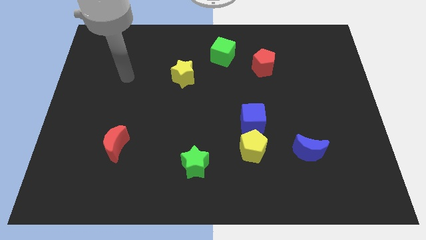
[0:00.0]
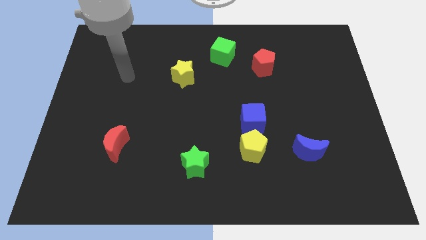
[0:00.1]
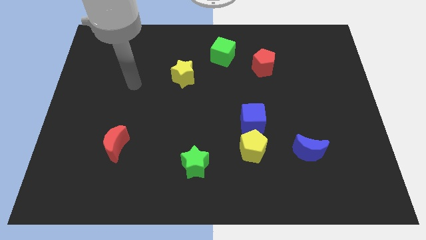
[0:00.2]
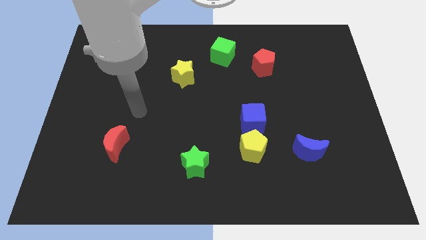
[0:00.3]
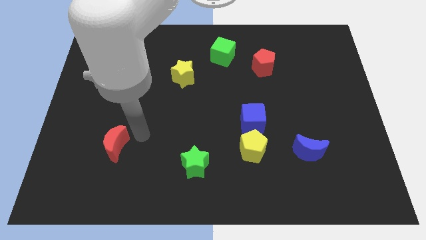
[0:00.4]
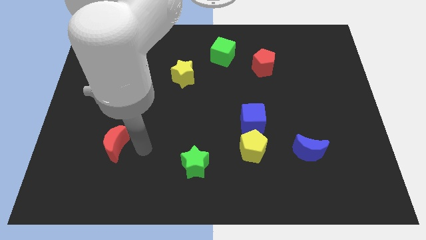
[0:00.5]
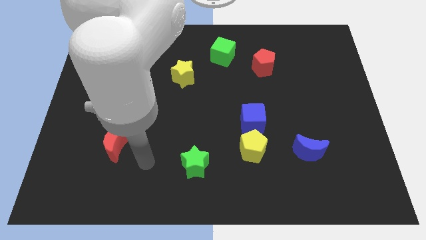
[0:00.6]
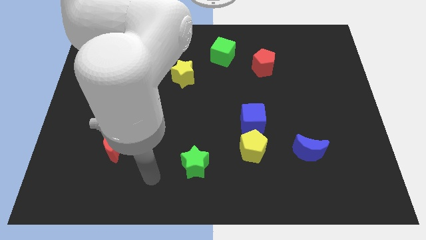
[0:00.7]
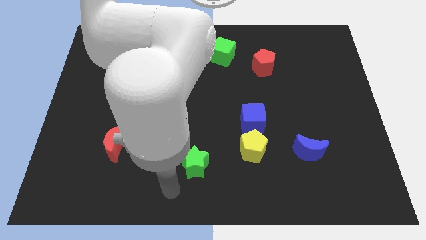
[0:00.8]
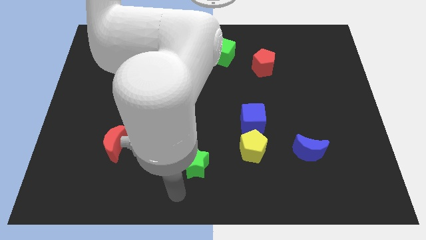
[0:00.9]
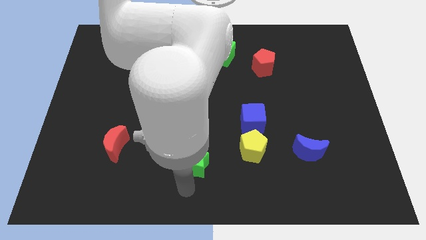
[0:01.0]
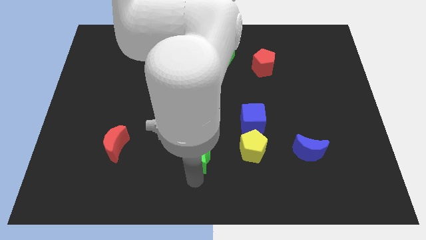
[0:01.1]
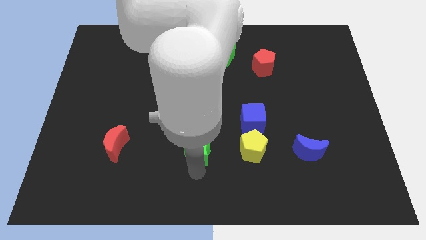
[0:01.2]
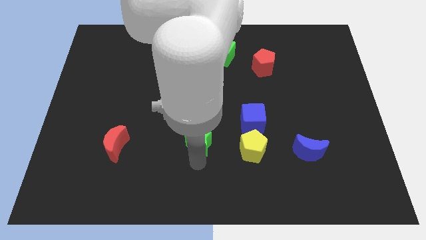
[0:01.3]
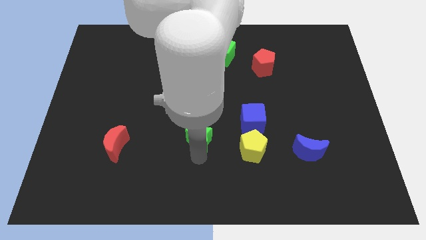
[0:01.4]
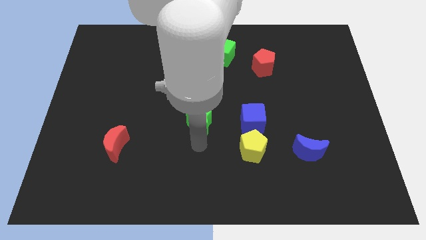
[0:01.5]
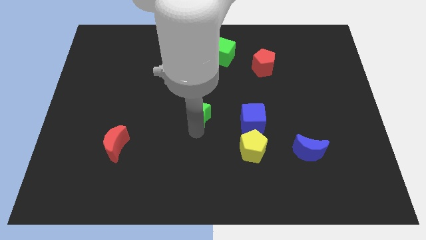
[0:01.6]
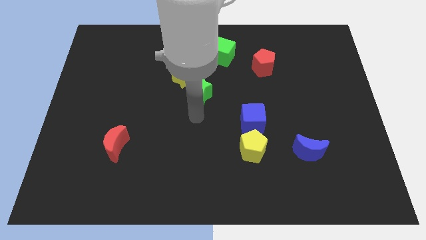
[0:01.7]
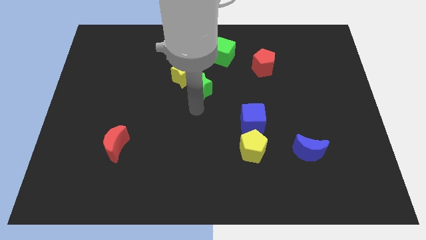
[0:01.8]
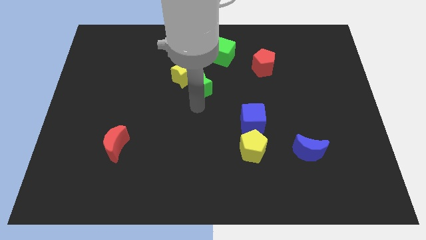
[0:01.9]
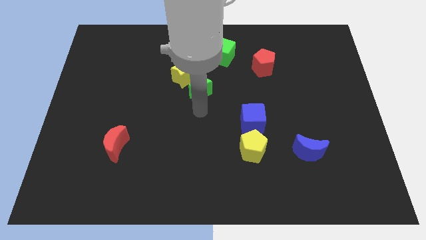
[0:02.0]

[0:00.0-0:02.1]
slide the green star close to the yellow star

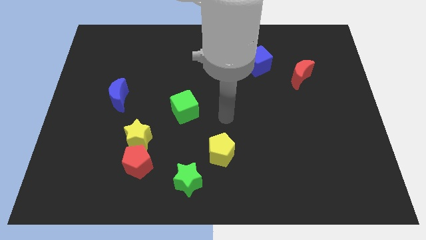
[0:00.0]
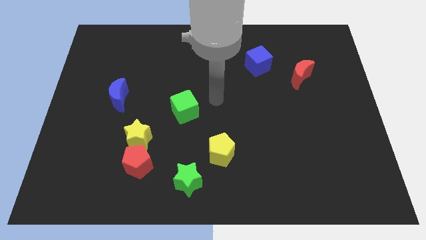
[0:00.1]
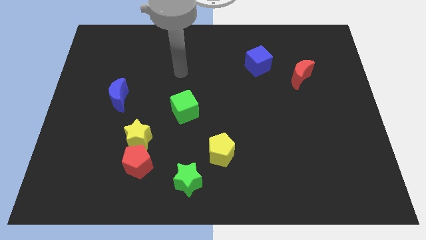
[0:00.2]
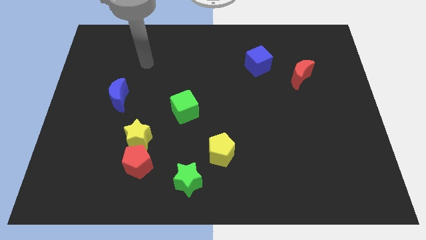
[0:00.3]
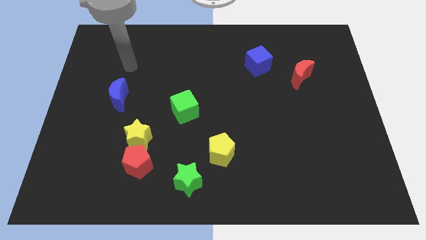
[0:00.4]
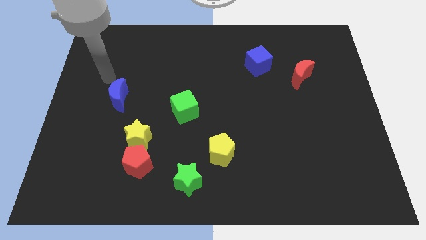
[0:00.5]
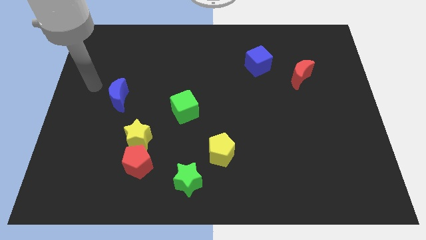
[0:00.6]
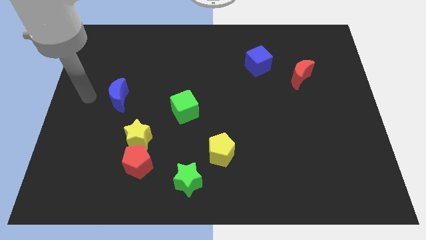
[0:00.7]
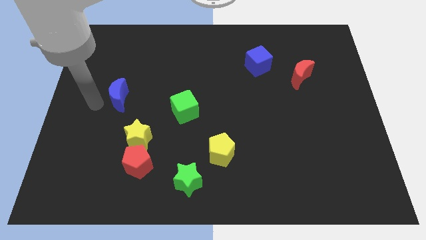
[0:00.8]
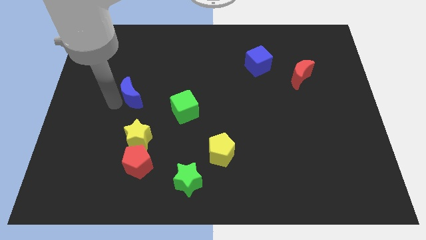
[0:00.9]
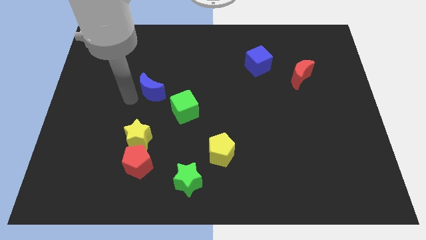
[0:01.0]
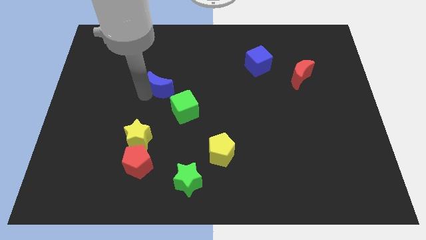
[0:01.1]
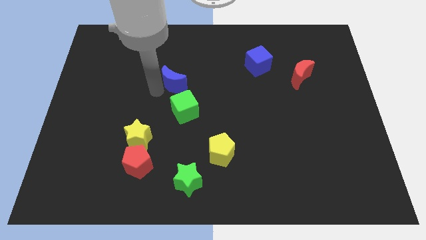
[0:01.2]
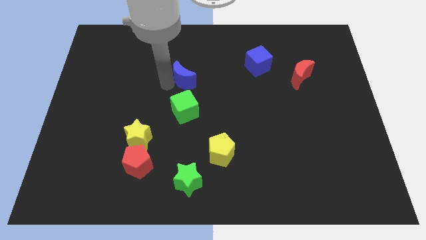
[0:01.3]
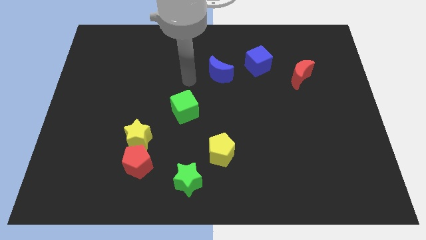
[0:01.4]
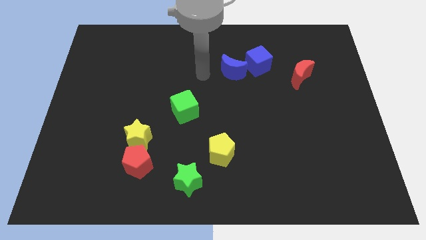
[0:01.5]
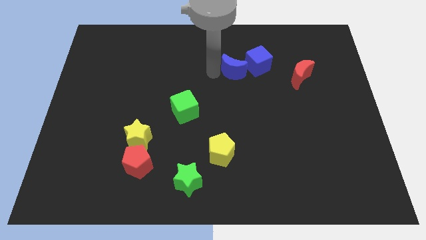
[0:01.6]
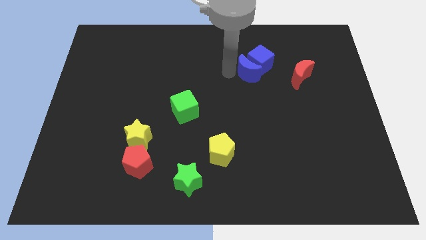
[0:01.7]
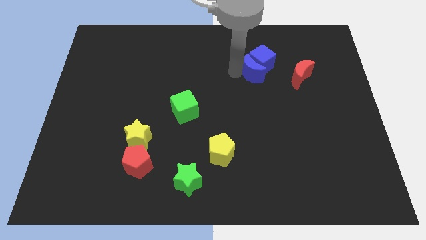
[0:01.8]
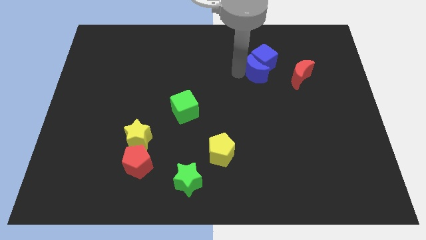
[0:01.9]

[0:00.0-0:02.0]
push the blue moon towards the blue cube

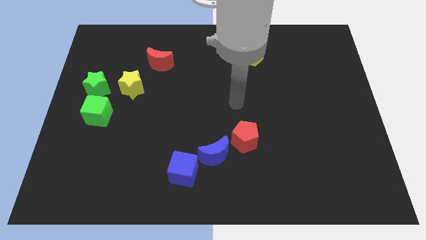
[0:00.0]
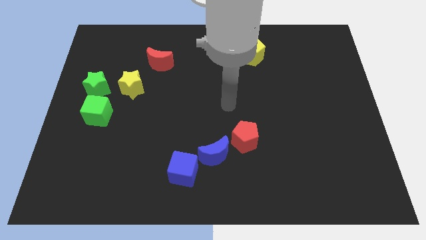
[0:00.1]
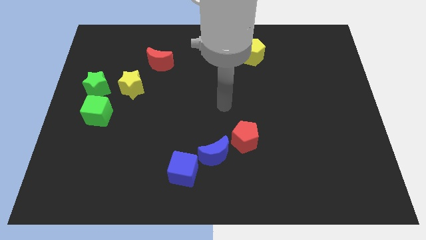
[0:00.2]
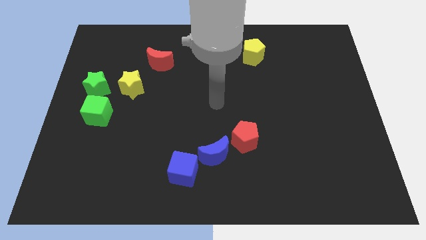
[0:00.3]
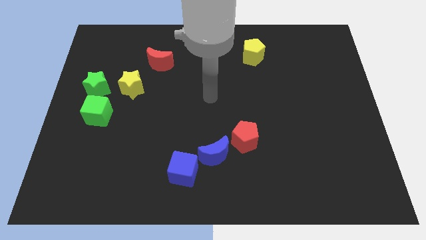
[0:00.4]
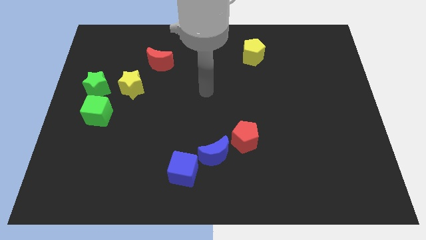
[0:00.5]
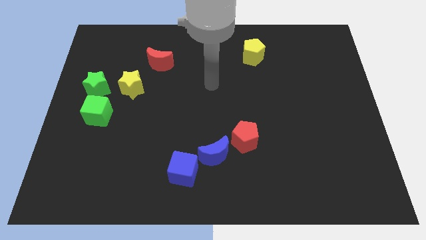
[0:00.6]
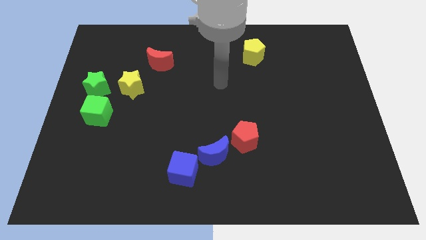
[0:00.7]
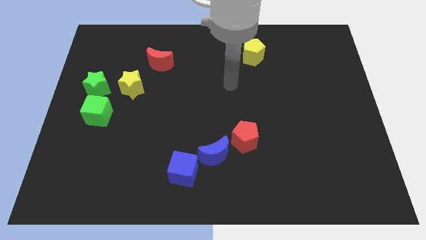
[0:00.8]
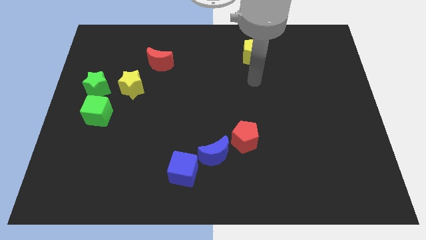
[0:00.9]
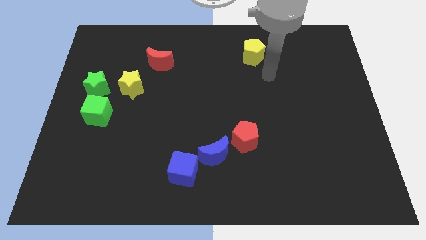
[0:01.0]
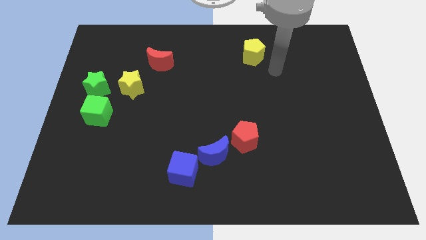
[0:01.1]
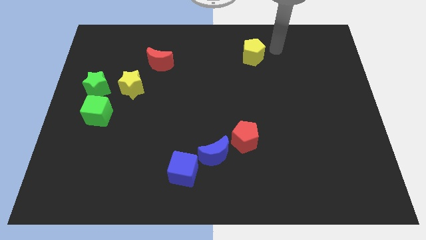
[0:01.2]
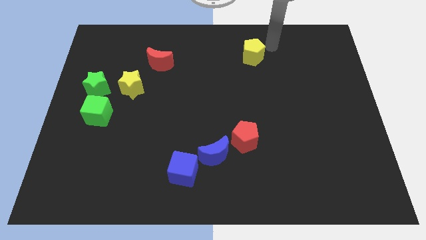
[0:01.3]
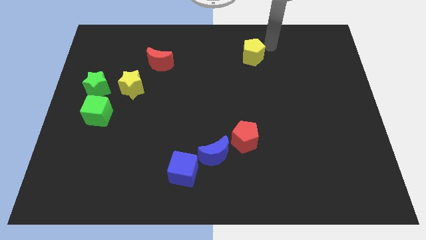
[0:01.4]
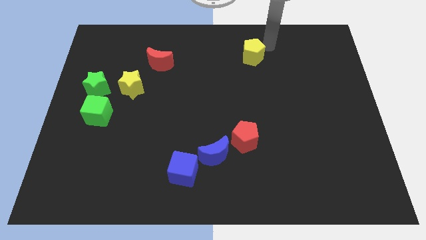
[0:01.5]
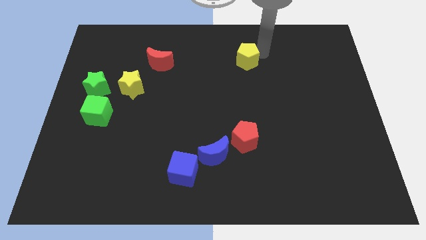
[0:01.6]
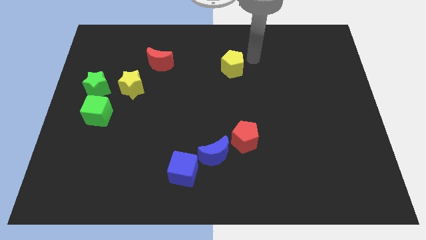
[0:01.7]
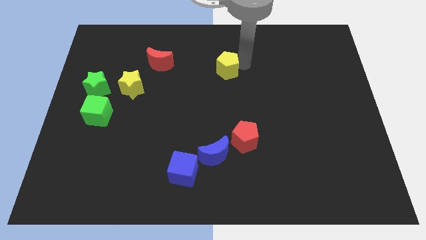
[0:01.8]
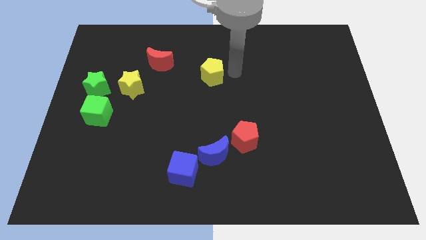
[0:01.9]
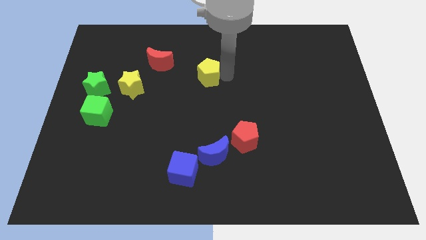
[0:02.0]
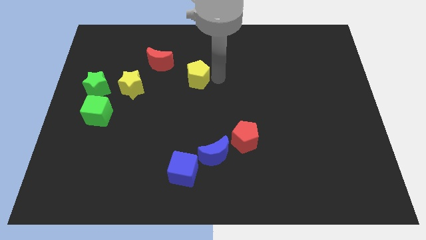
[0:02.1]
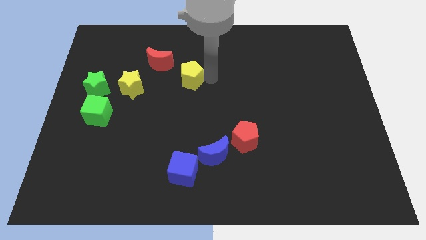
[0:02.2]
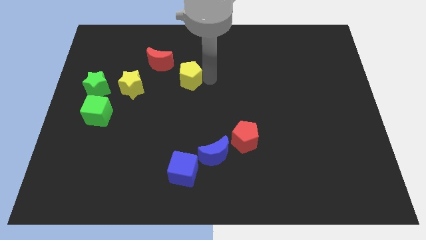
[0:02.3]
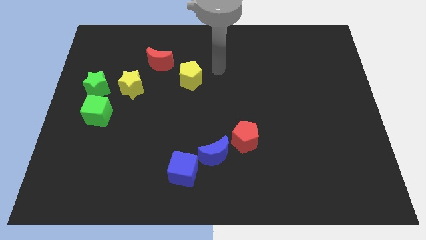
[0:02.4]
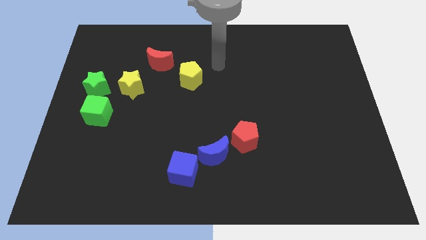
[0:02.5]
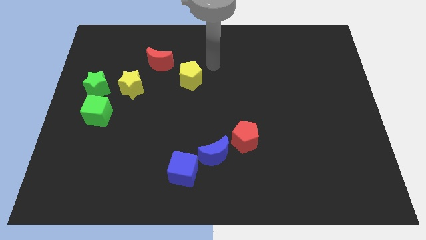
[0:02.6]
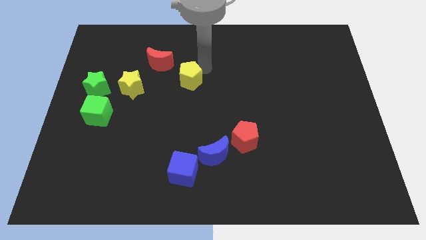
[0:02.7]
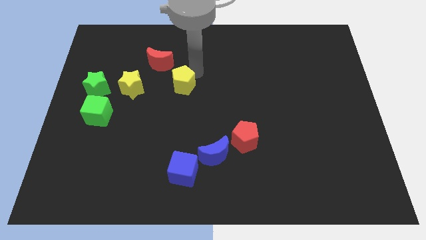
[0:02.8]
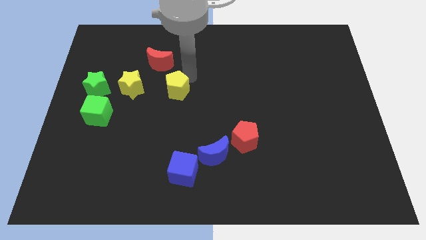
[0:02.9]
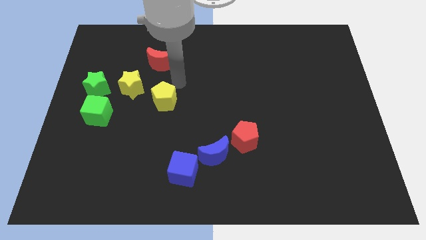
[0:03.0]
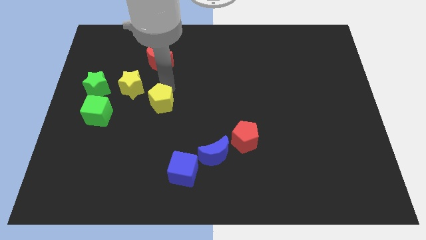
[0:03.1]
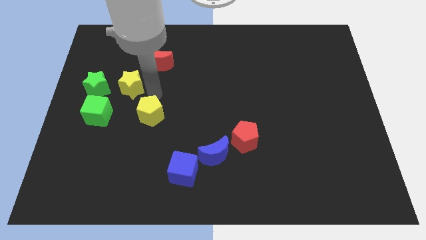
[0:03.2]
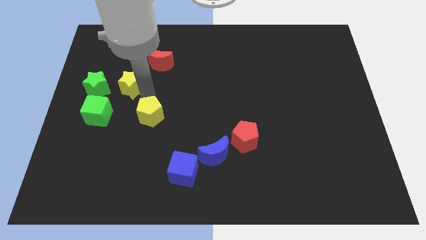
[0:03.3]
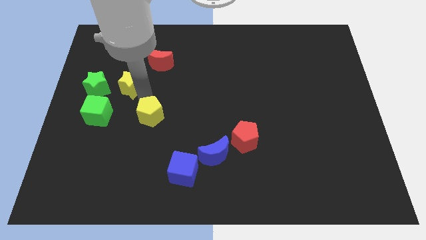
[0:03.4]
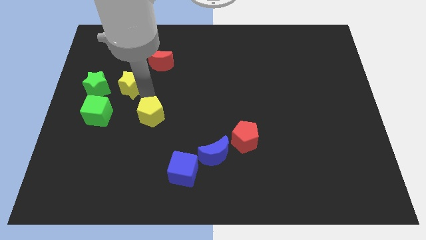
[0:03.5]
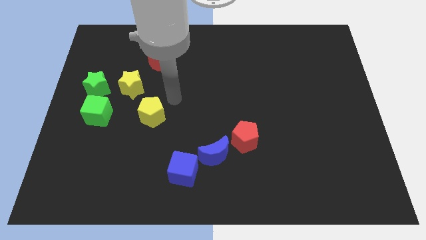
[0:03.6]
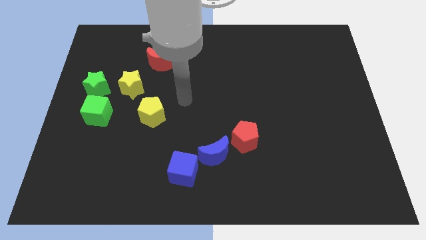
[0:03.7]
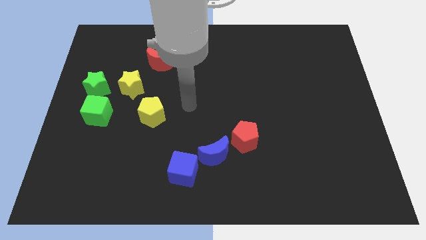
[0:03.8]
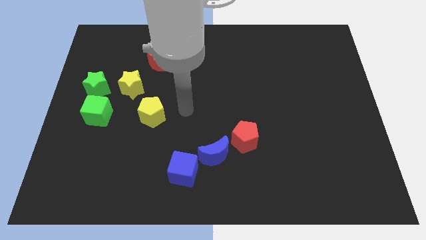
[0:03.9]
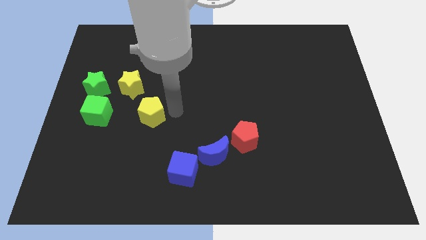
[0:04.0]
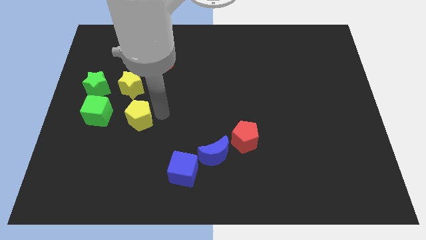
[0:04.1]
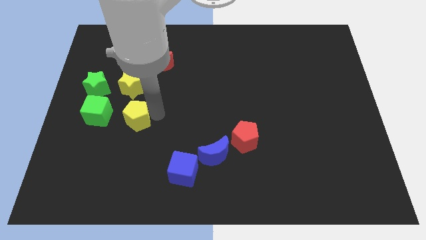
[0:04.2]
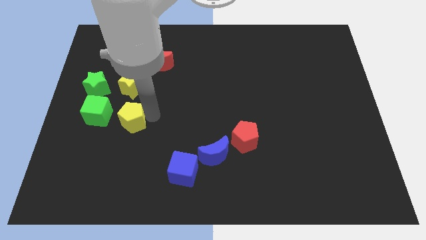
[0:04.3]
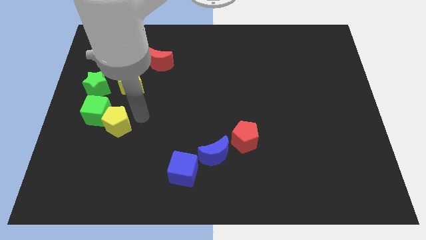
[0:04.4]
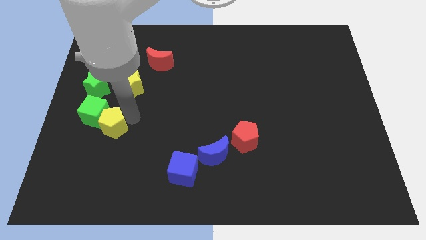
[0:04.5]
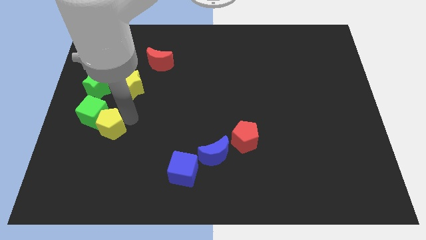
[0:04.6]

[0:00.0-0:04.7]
move the yellow pentagon close to the green cube
